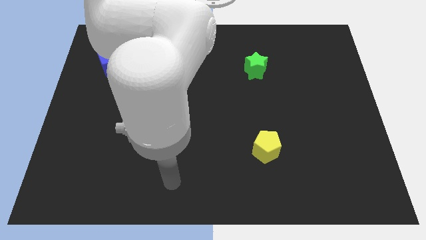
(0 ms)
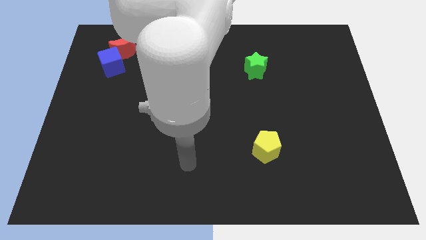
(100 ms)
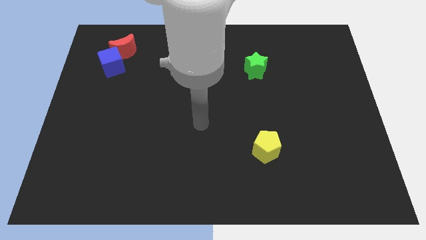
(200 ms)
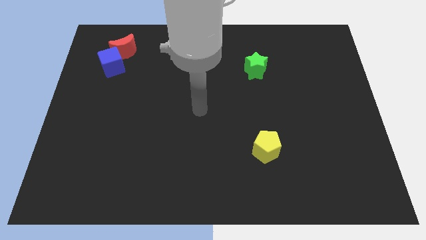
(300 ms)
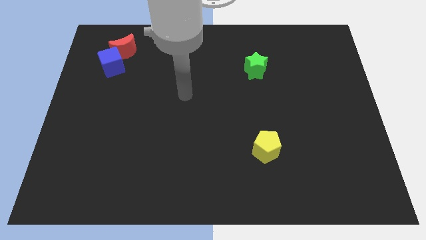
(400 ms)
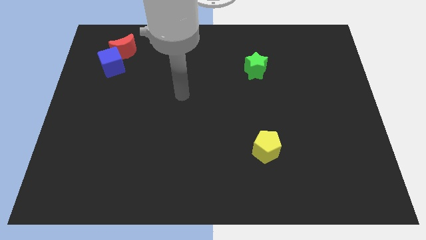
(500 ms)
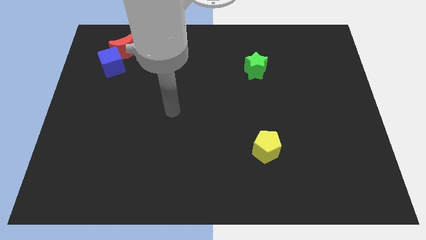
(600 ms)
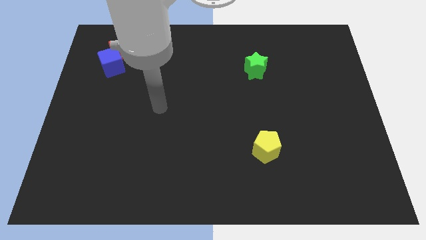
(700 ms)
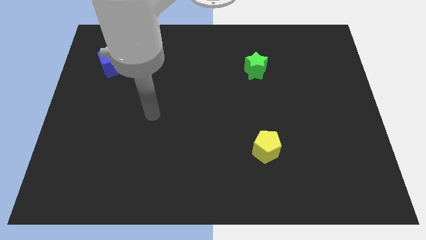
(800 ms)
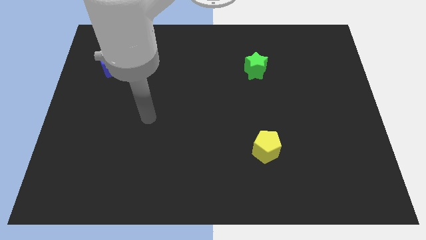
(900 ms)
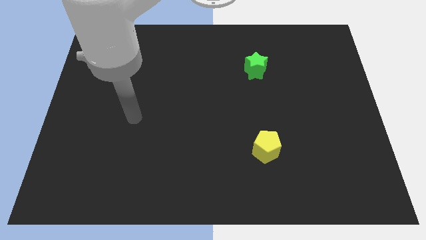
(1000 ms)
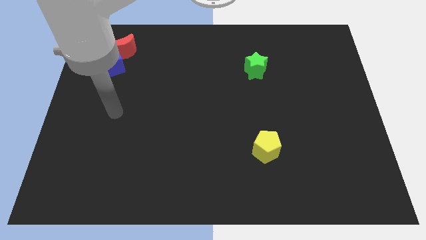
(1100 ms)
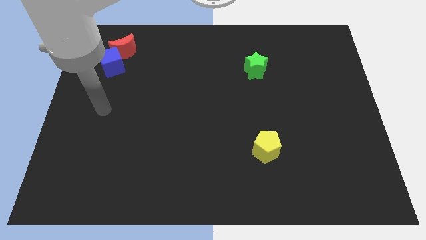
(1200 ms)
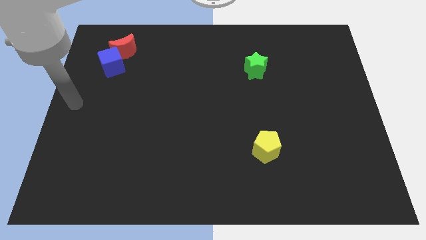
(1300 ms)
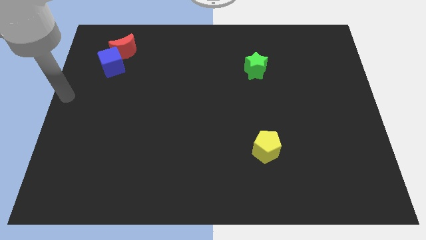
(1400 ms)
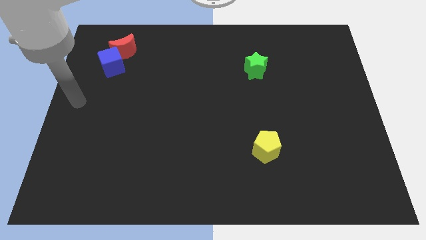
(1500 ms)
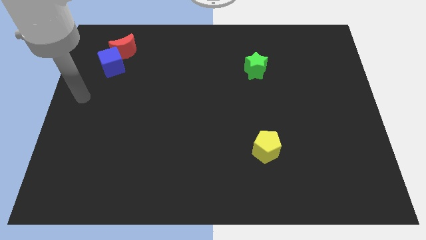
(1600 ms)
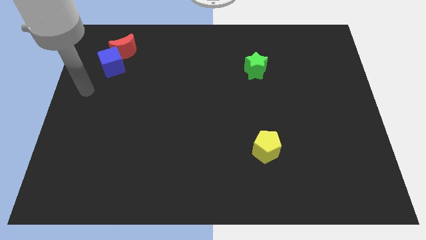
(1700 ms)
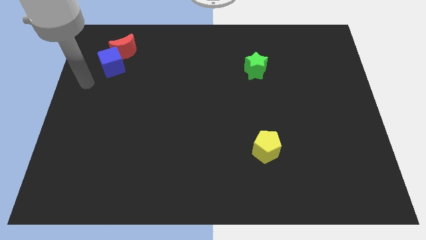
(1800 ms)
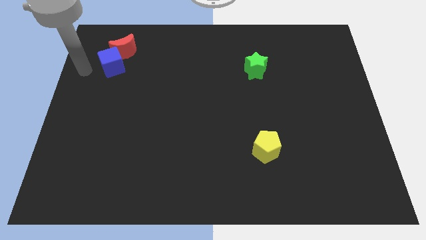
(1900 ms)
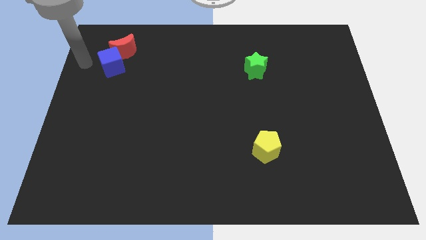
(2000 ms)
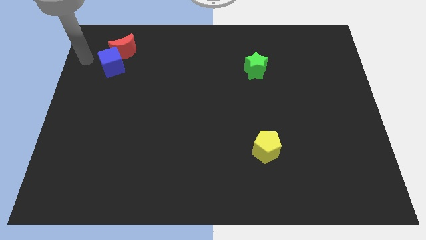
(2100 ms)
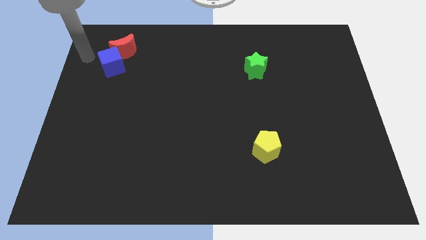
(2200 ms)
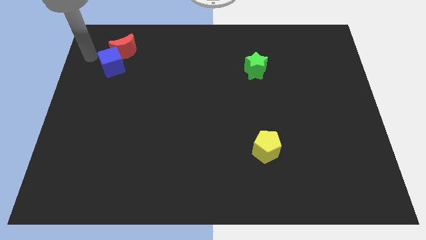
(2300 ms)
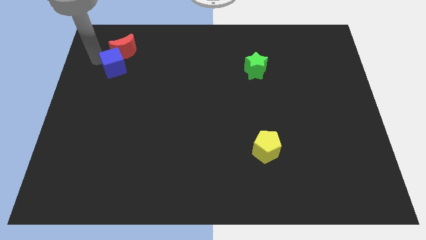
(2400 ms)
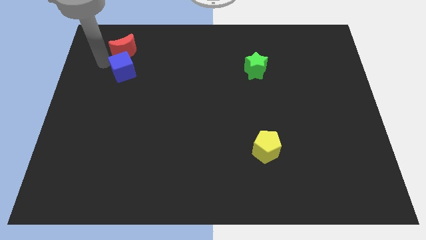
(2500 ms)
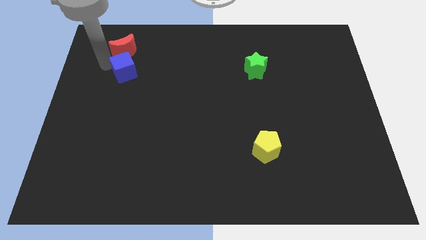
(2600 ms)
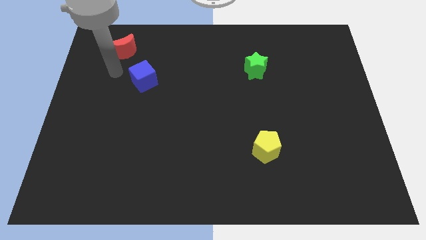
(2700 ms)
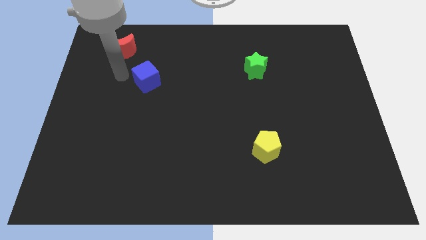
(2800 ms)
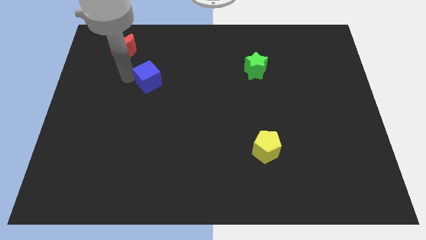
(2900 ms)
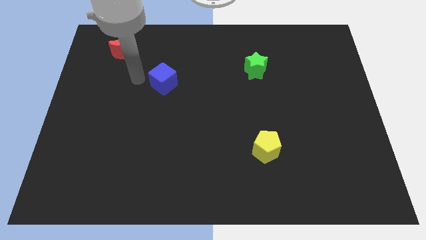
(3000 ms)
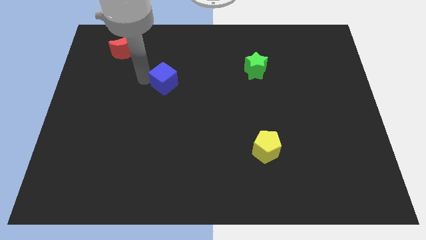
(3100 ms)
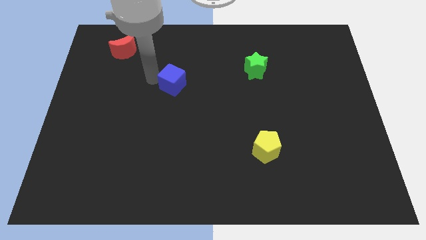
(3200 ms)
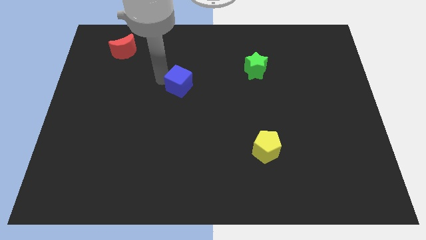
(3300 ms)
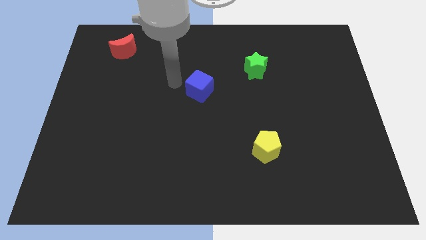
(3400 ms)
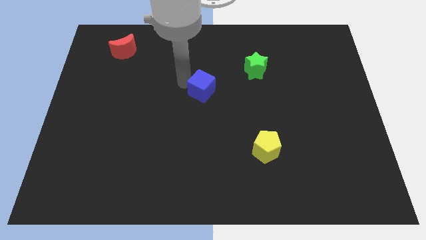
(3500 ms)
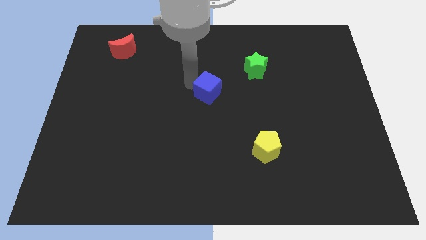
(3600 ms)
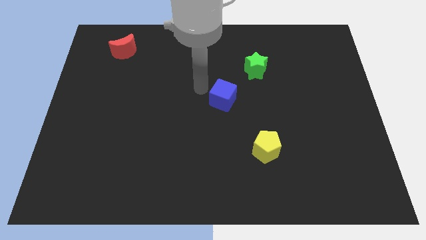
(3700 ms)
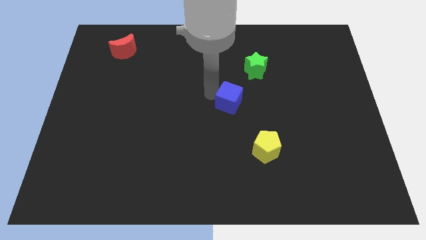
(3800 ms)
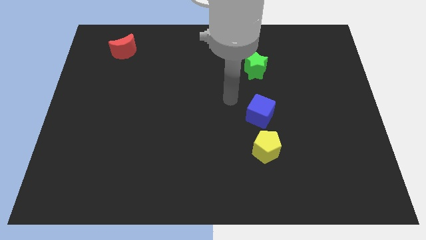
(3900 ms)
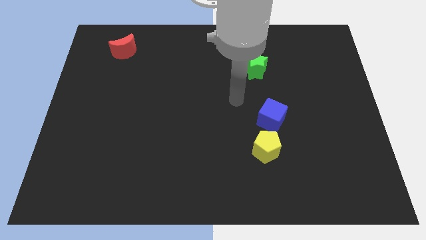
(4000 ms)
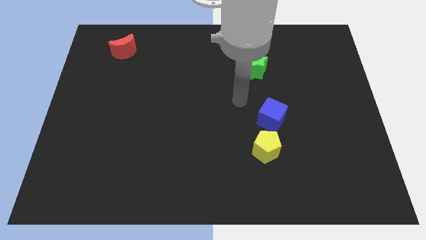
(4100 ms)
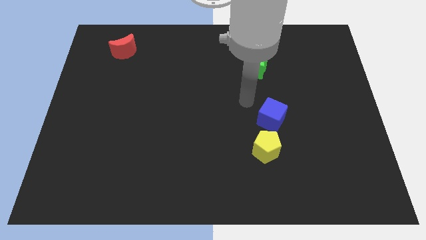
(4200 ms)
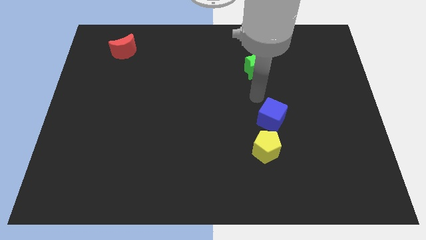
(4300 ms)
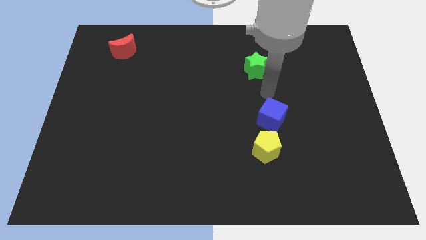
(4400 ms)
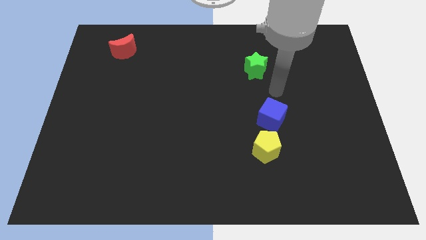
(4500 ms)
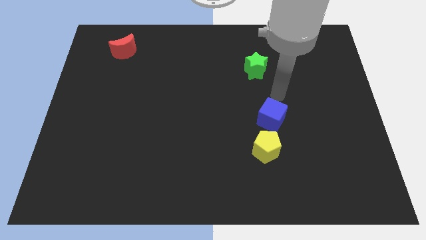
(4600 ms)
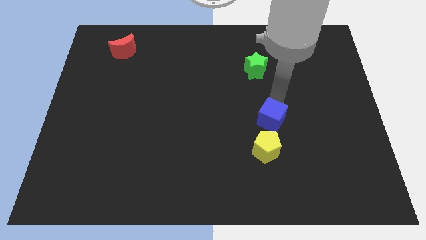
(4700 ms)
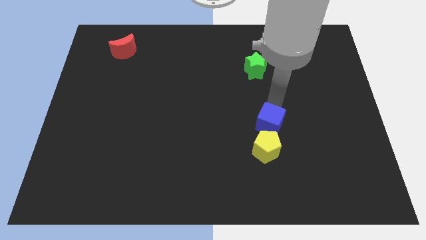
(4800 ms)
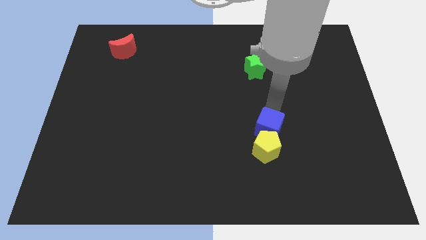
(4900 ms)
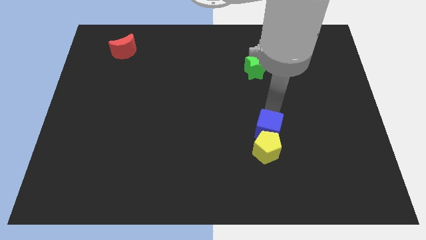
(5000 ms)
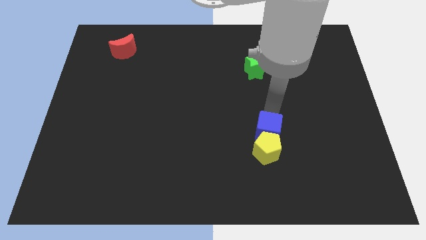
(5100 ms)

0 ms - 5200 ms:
slide the blue block towards the yellow block

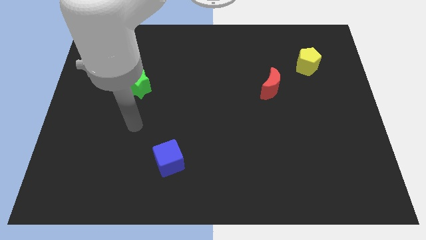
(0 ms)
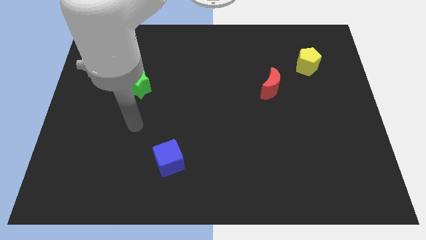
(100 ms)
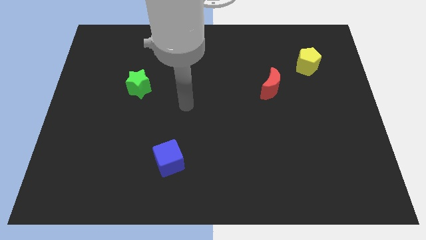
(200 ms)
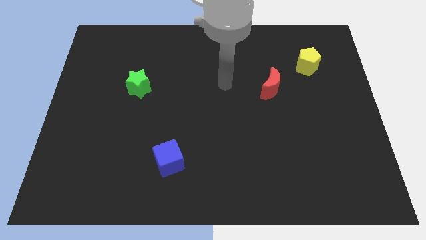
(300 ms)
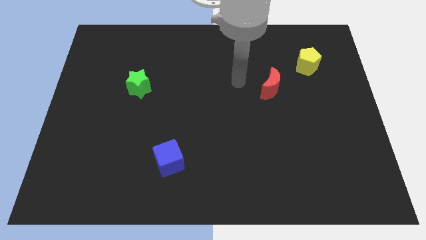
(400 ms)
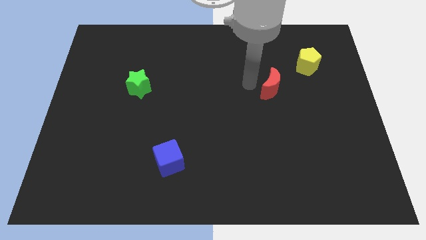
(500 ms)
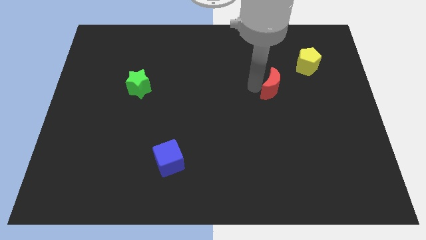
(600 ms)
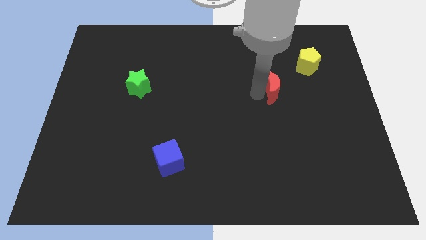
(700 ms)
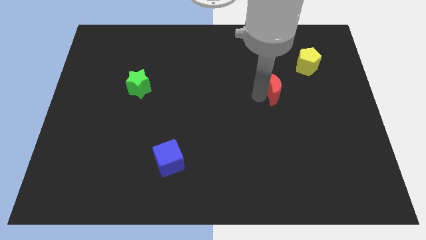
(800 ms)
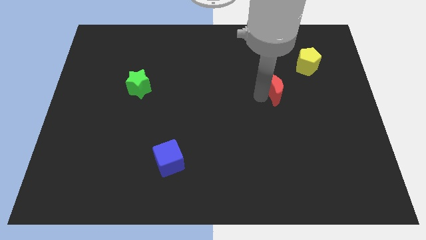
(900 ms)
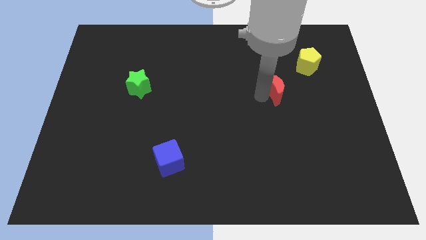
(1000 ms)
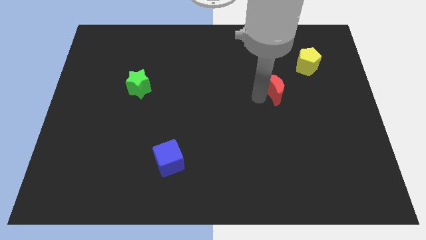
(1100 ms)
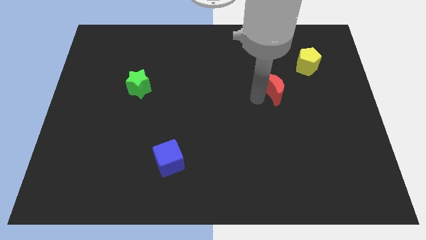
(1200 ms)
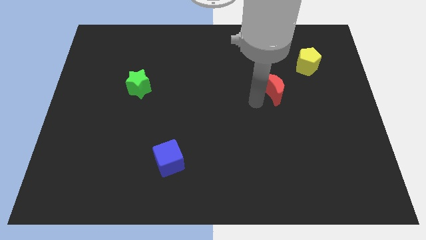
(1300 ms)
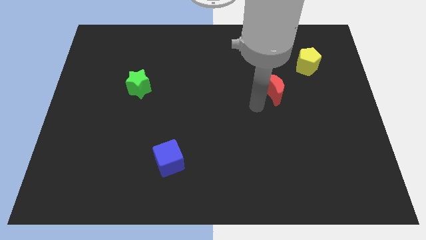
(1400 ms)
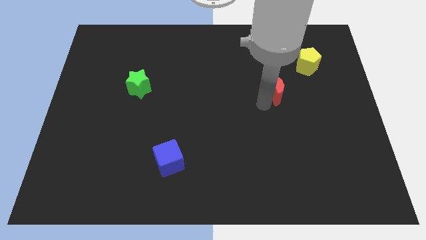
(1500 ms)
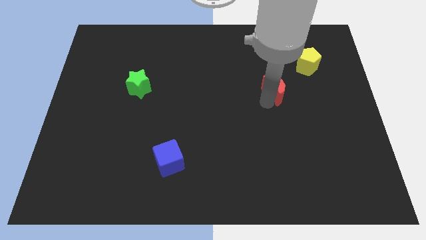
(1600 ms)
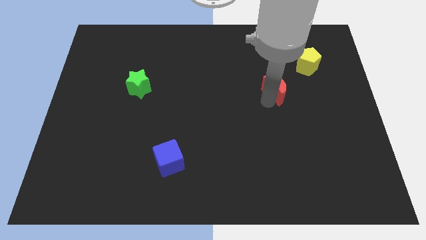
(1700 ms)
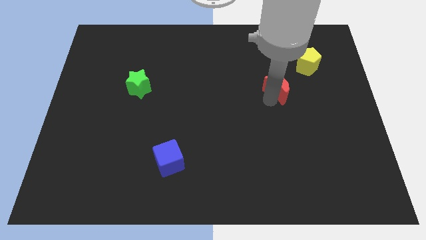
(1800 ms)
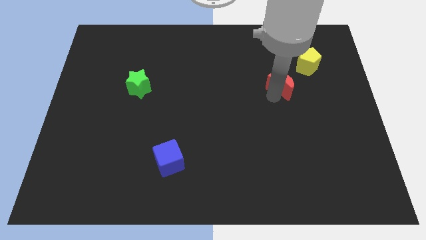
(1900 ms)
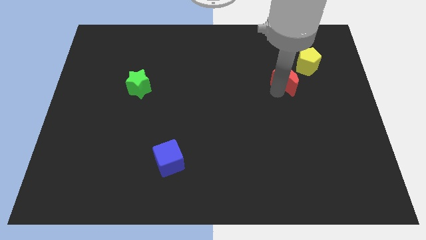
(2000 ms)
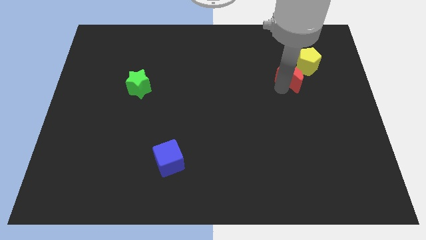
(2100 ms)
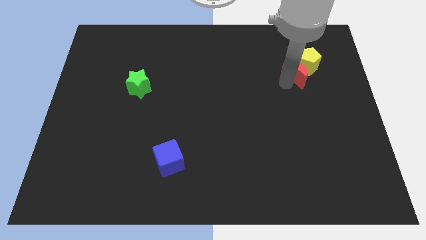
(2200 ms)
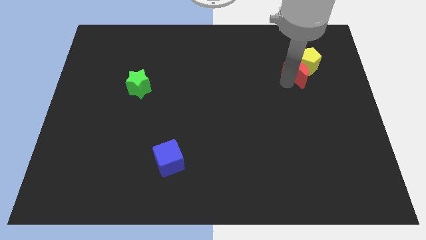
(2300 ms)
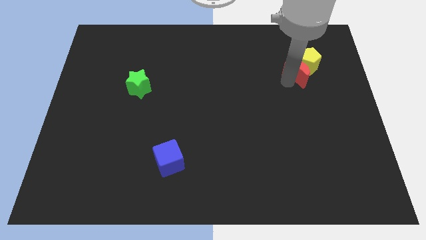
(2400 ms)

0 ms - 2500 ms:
move the red block to the pentagon

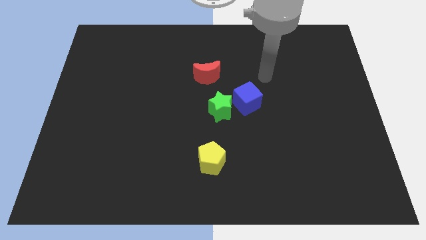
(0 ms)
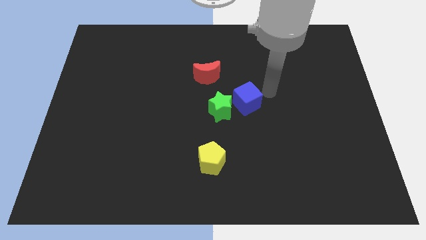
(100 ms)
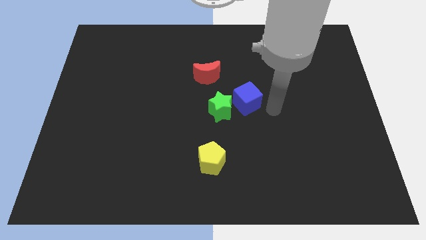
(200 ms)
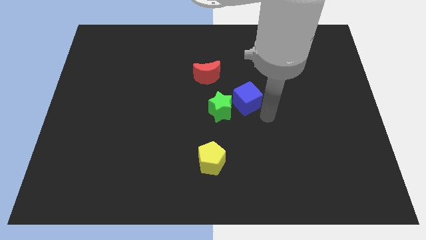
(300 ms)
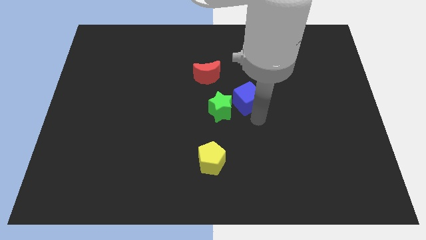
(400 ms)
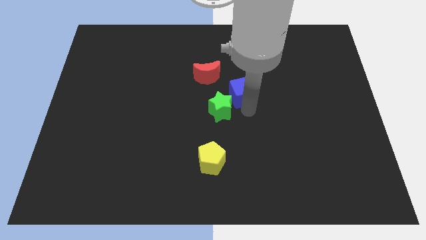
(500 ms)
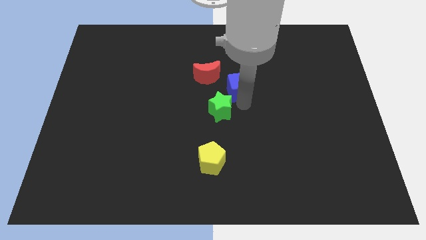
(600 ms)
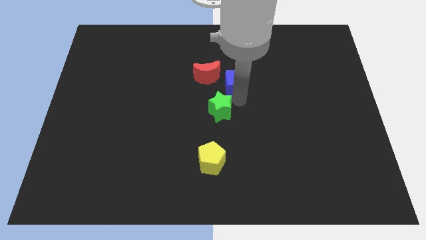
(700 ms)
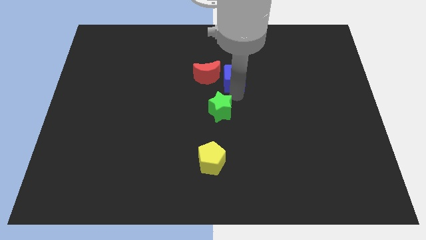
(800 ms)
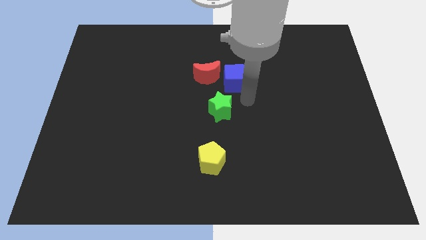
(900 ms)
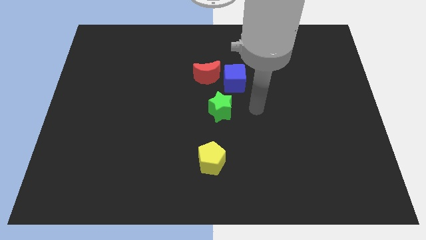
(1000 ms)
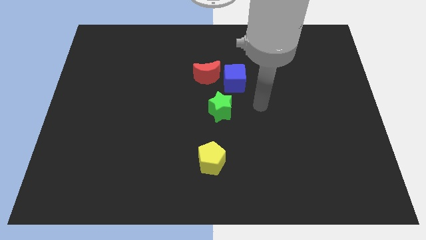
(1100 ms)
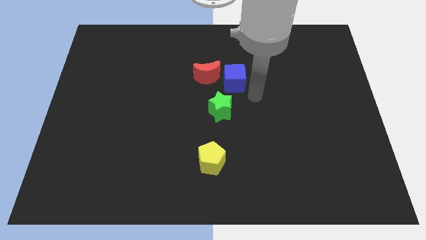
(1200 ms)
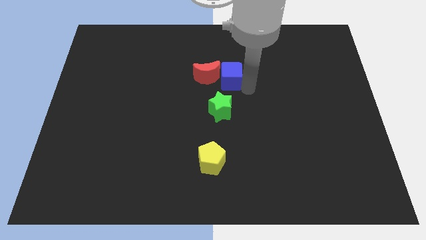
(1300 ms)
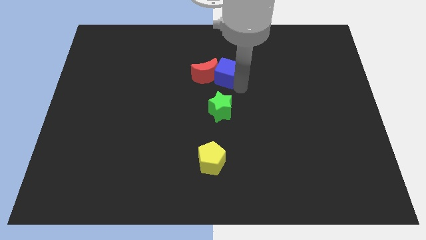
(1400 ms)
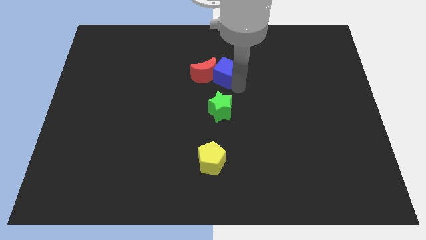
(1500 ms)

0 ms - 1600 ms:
push the blue block to the moon
